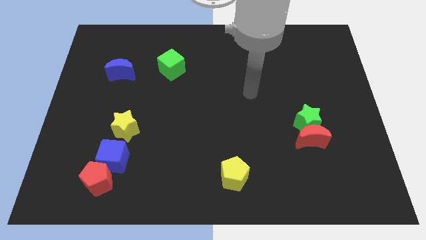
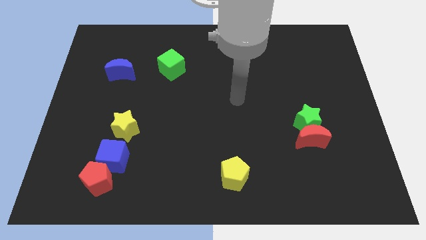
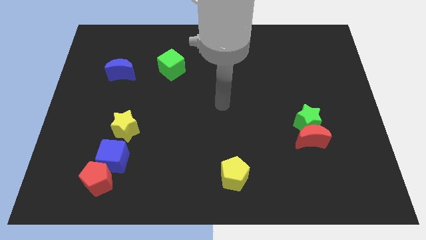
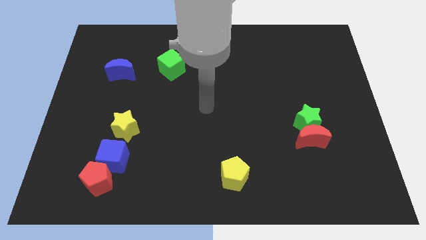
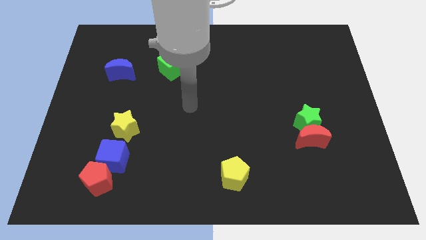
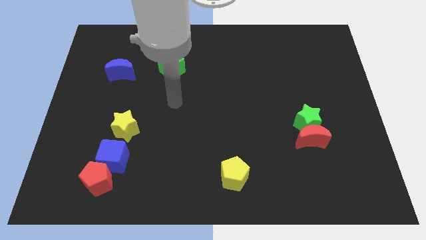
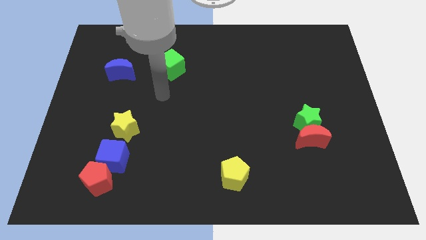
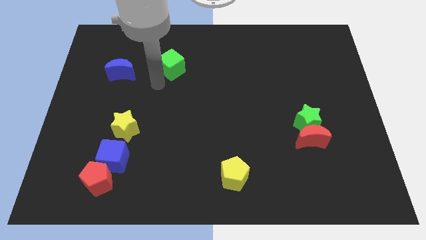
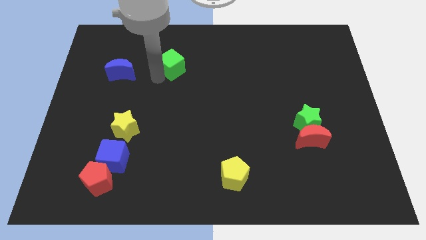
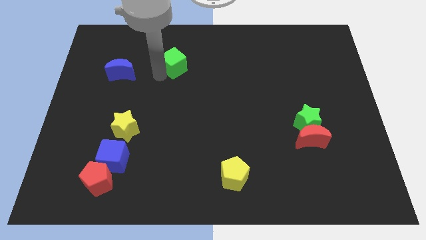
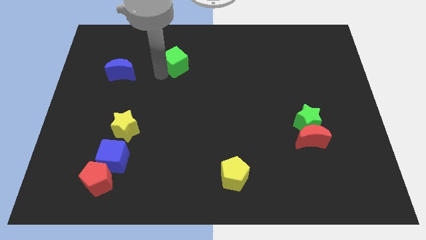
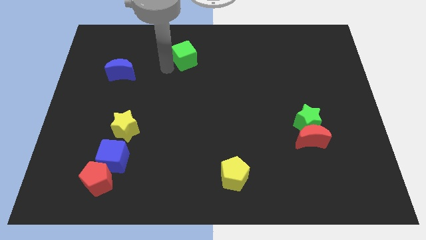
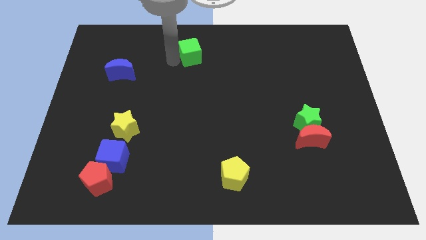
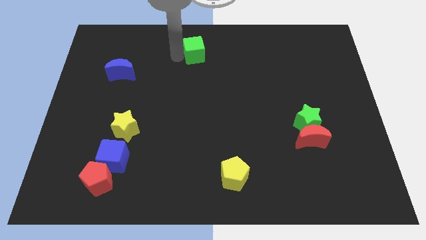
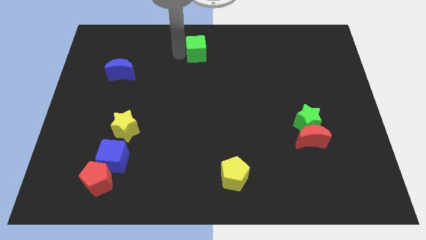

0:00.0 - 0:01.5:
push the green cube to the top center of the board

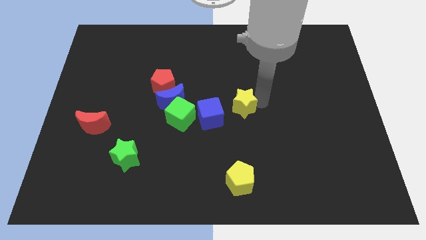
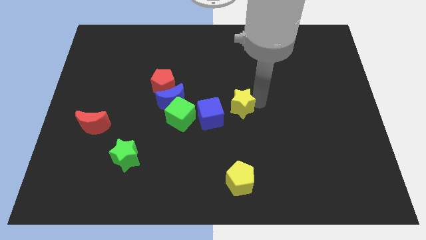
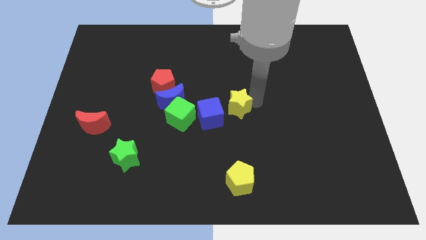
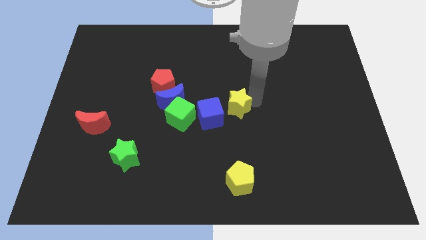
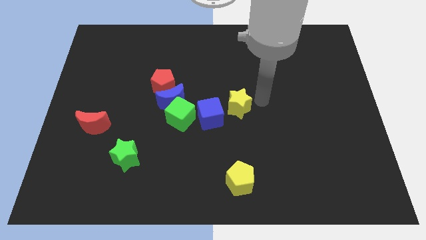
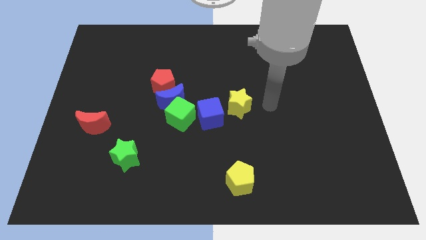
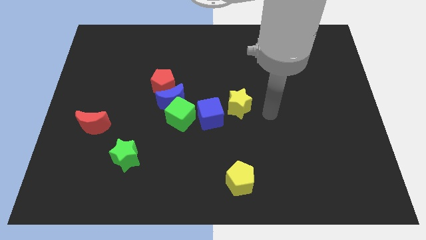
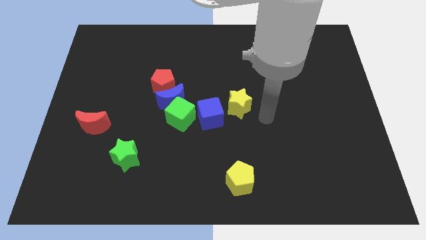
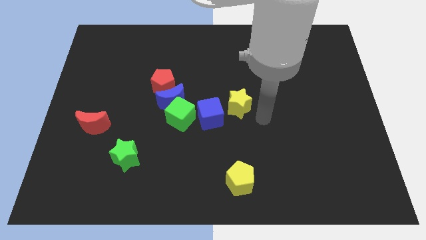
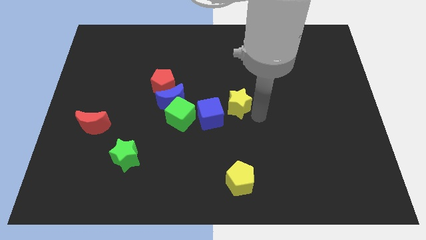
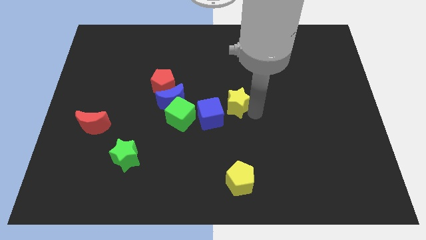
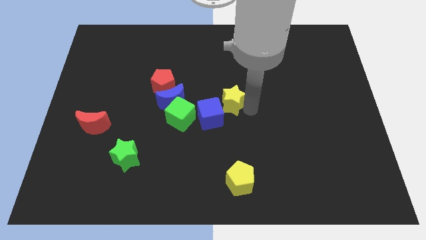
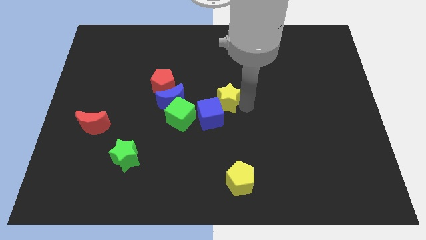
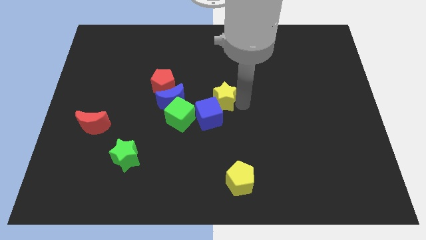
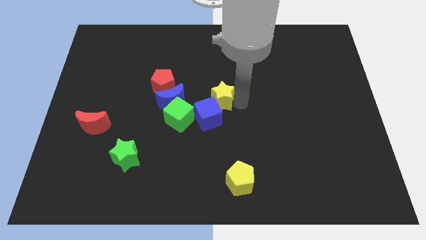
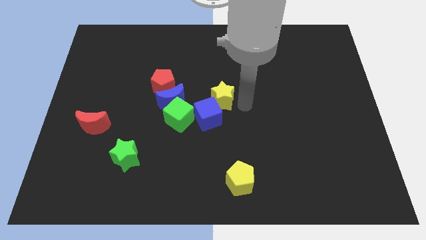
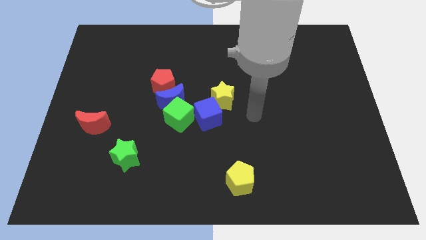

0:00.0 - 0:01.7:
place the yellow star parallel to the blue moon

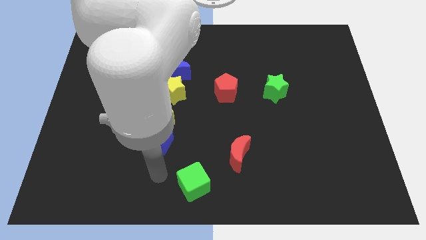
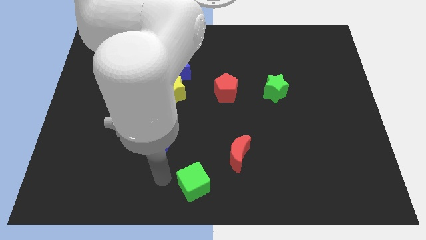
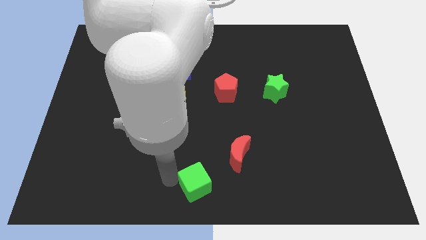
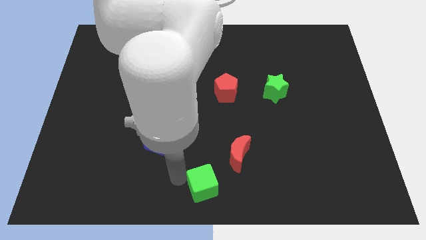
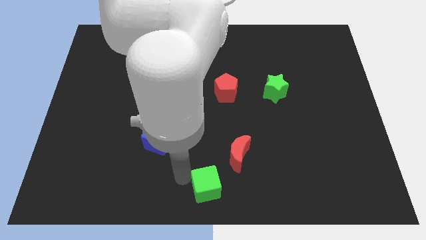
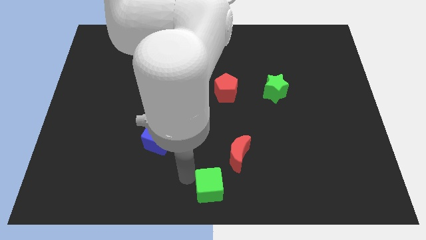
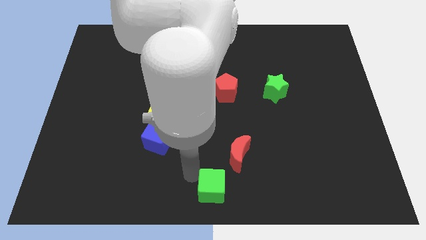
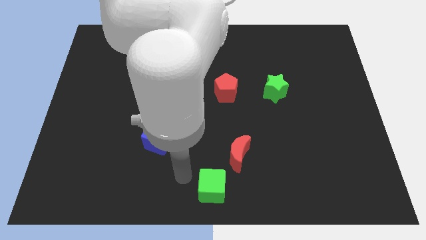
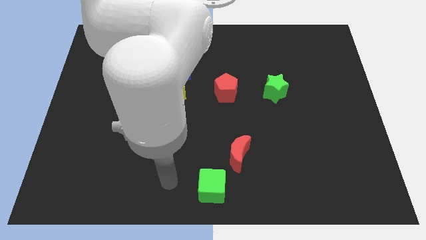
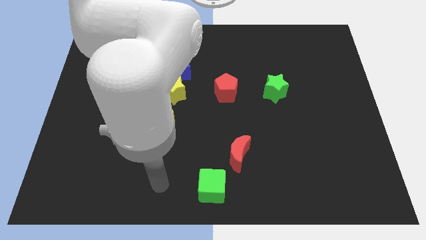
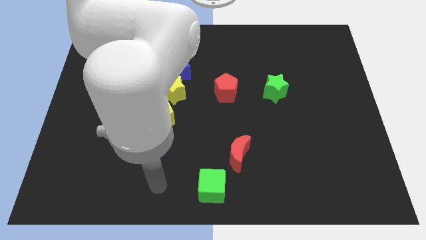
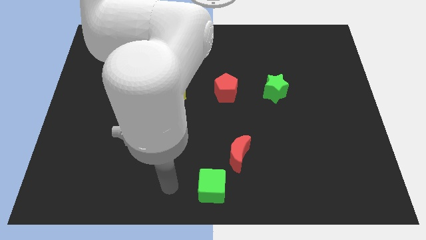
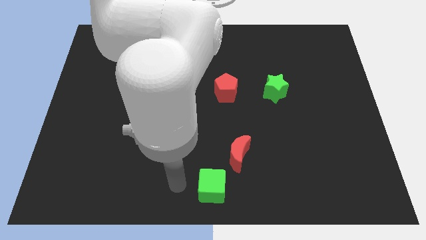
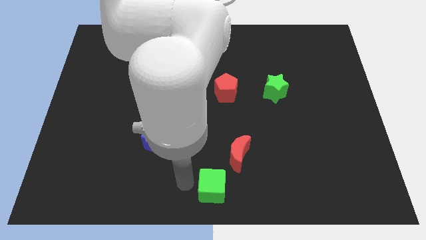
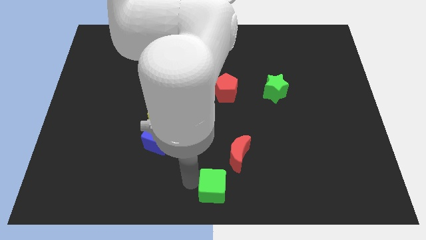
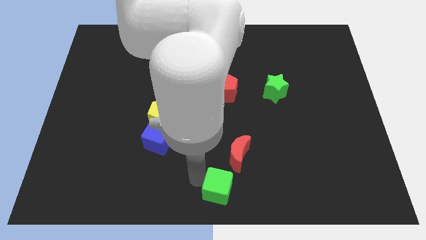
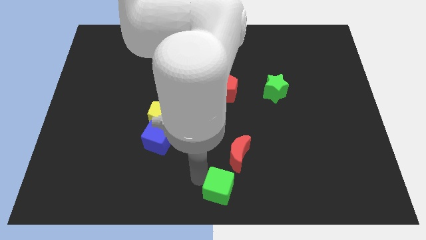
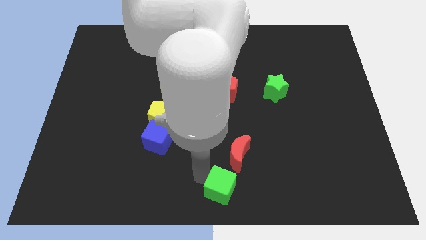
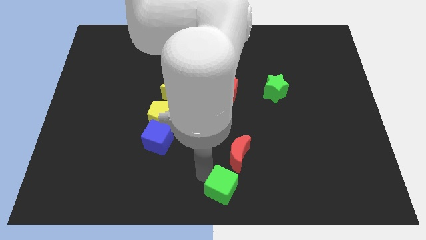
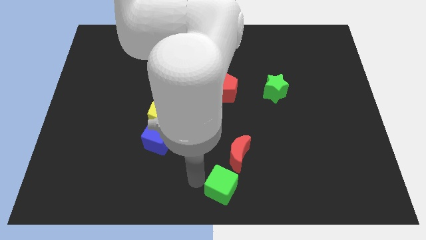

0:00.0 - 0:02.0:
push the green cube to the bottom center of the board

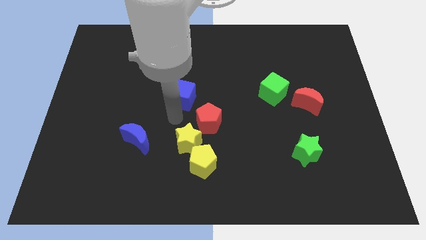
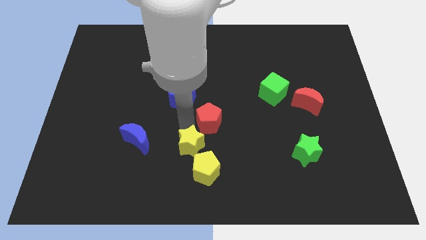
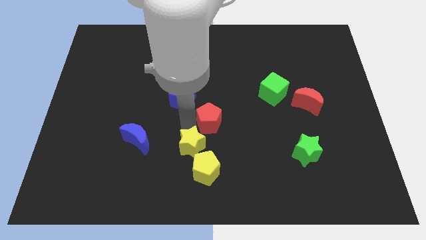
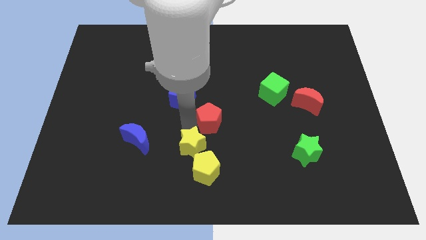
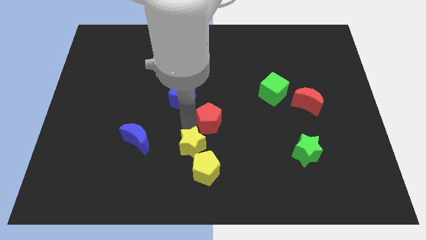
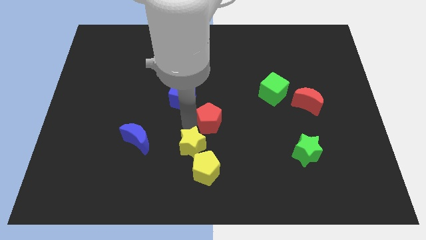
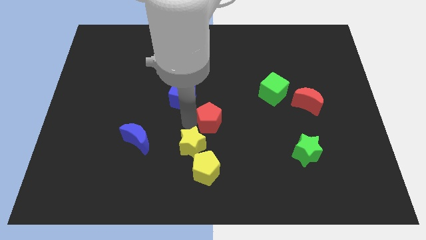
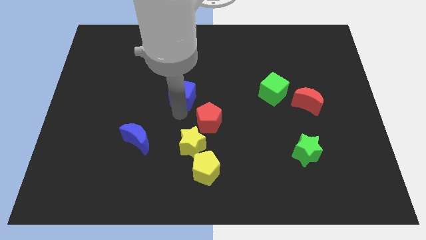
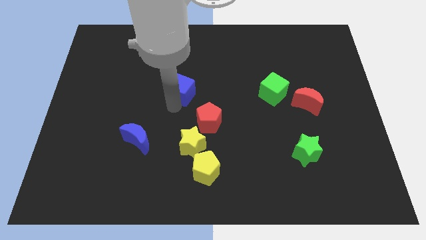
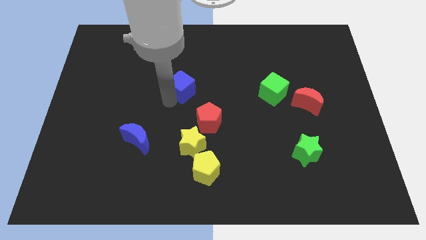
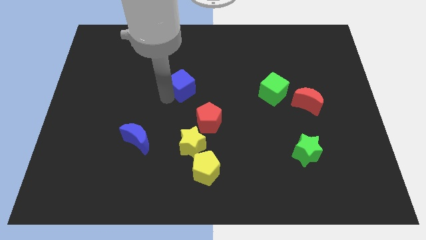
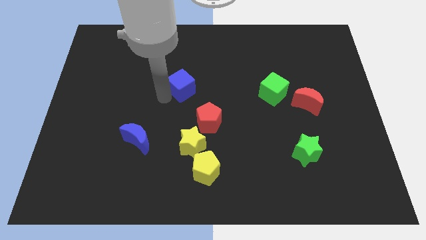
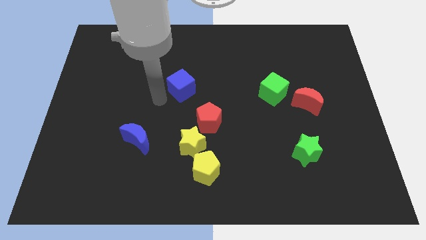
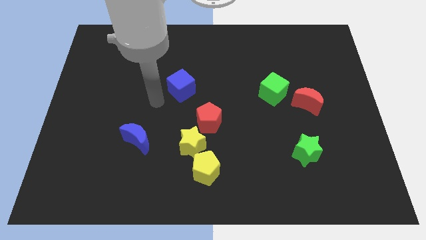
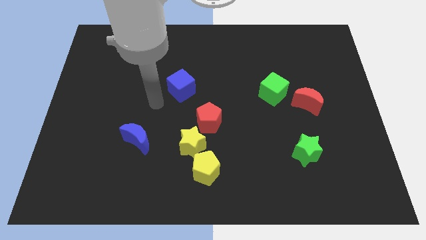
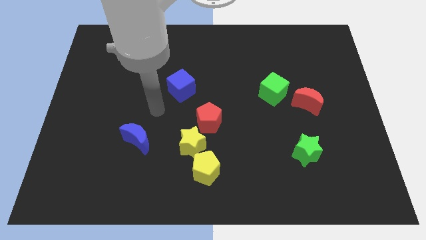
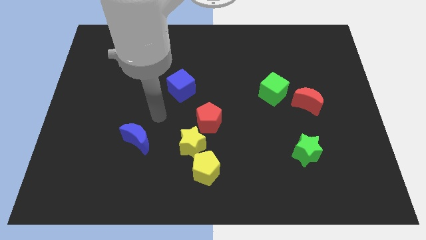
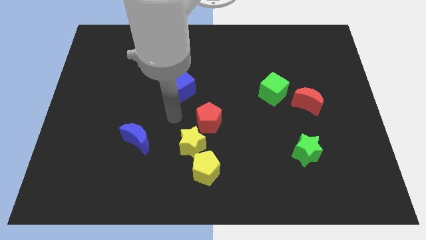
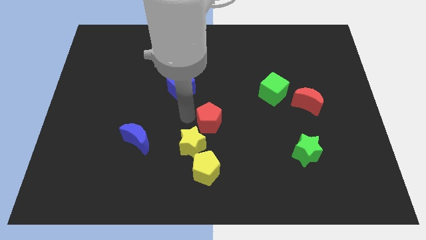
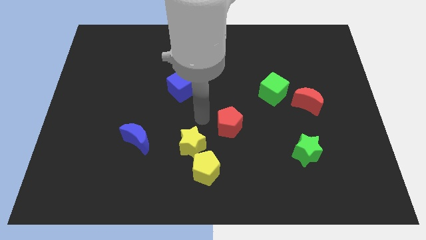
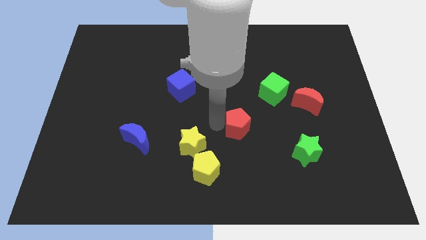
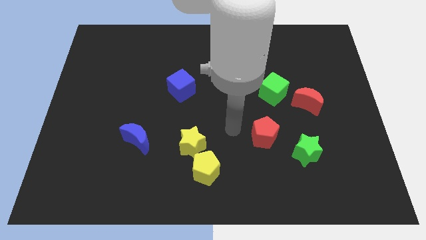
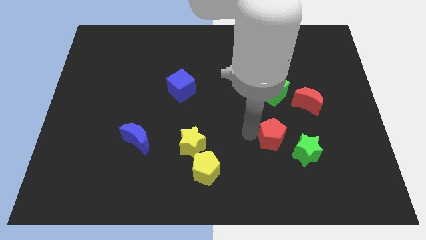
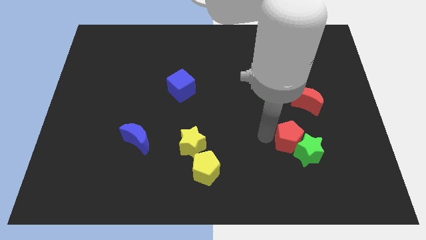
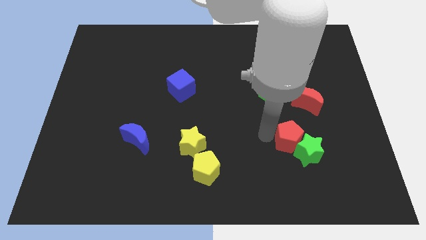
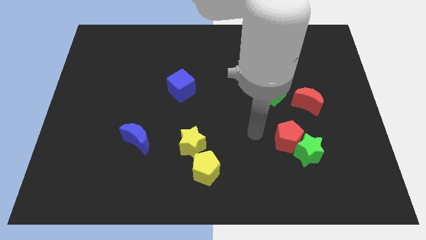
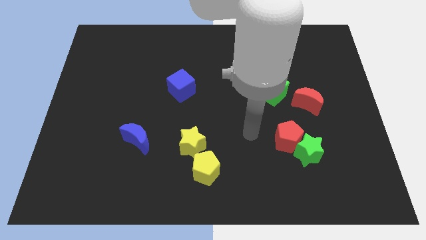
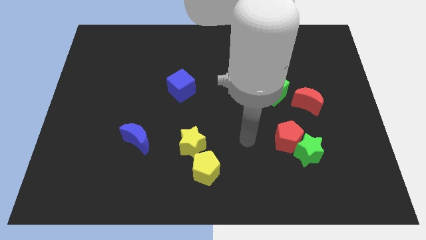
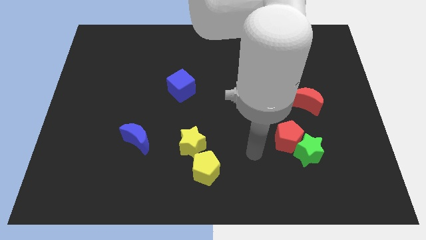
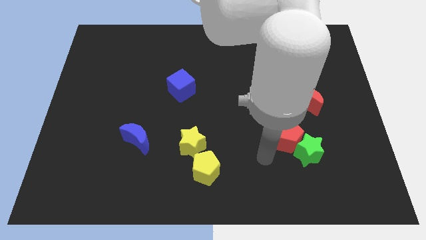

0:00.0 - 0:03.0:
push the red pentagon into the green star

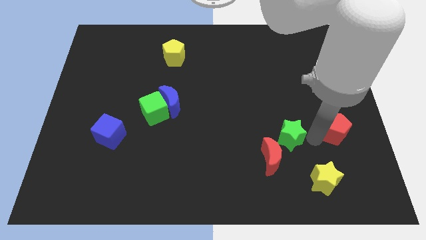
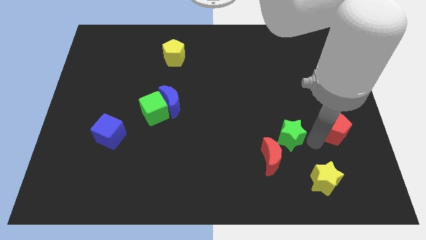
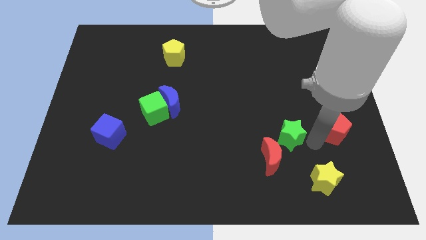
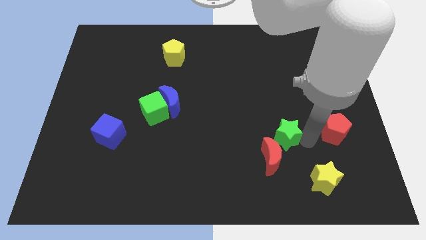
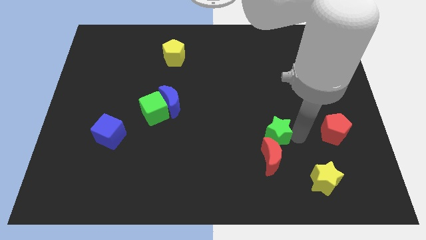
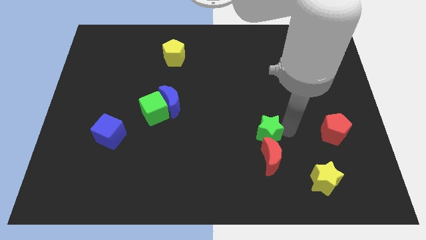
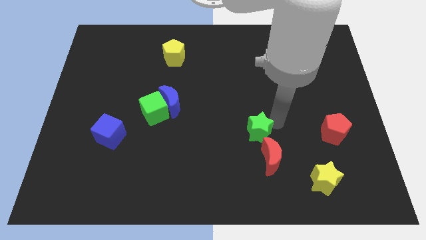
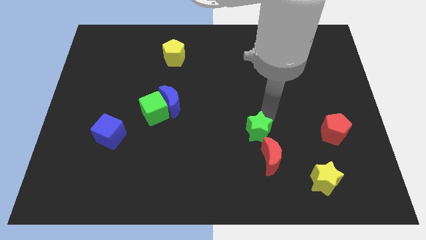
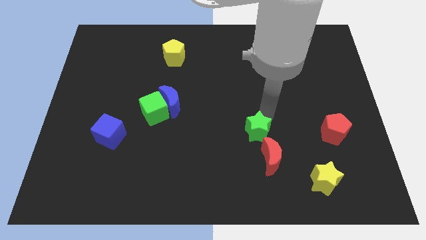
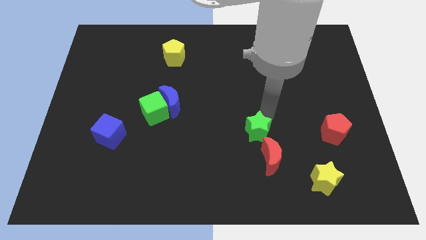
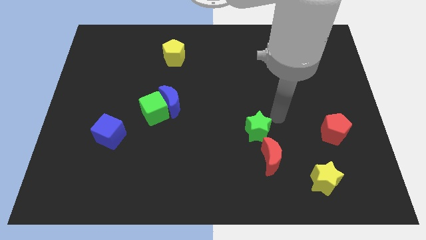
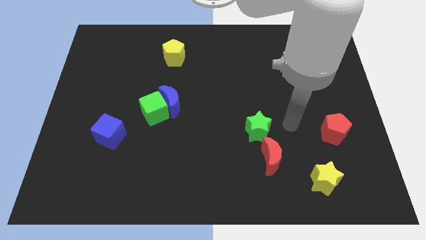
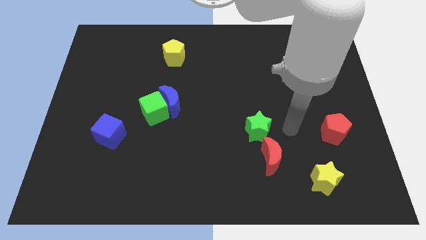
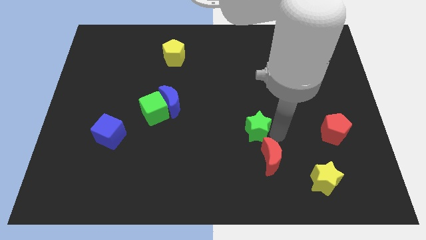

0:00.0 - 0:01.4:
slide the green star slightly to the left
